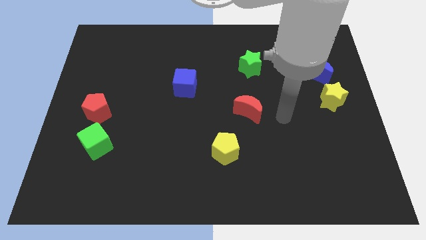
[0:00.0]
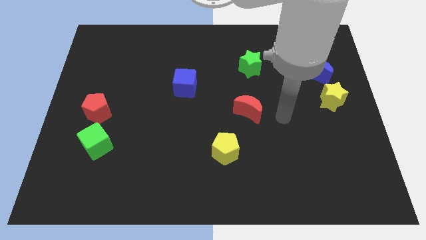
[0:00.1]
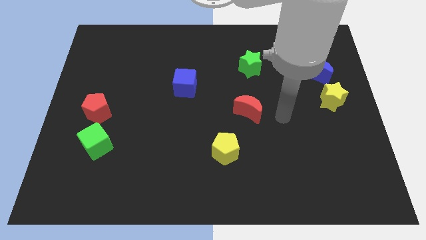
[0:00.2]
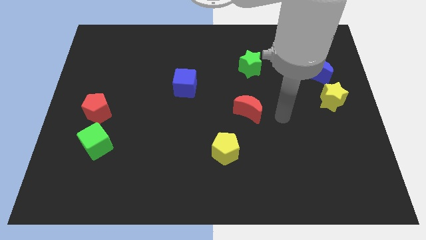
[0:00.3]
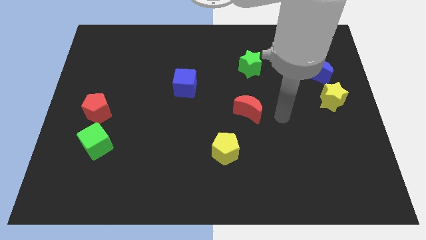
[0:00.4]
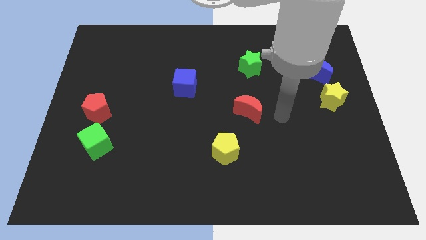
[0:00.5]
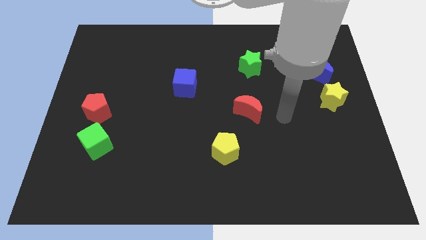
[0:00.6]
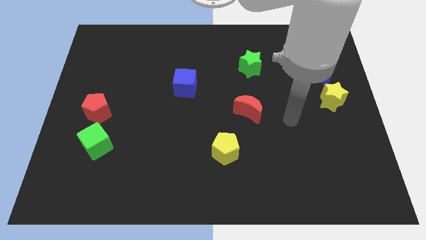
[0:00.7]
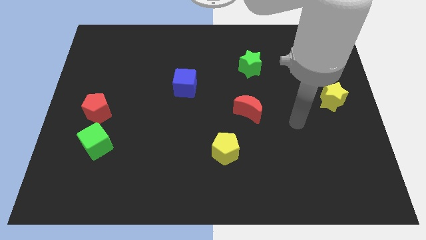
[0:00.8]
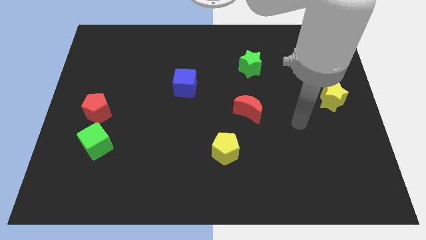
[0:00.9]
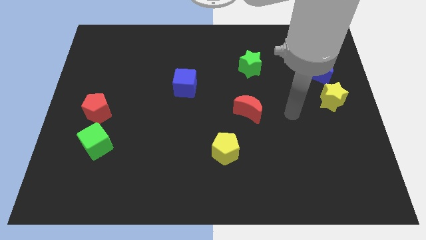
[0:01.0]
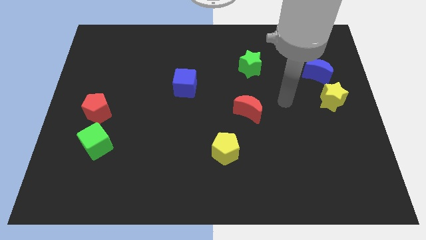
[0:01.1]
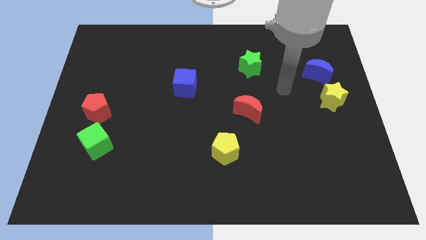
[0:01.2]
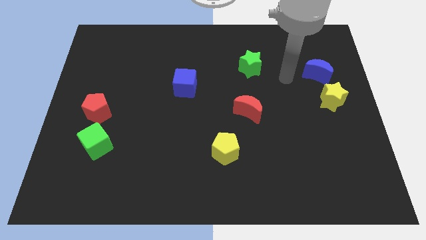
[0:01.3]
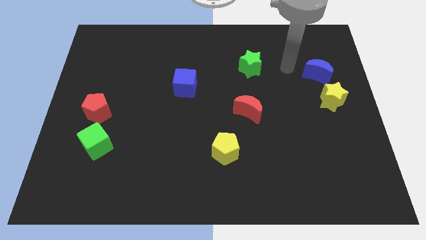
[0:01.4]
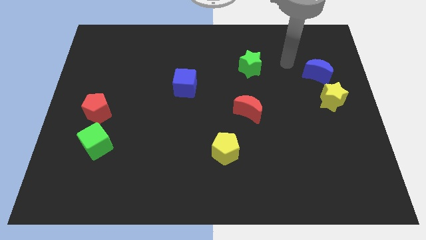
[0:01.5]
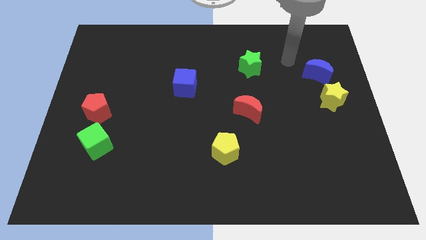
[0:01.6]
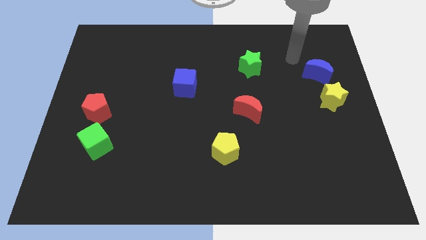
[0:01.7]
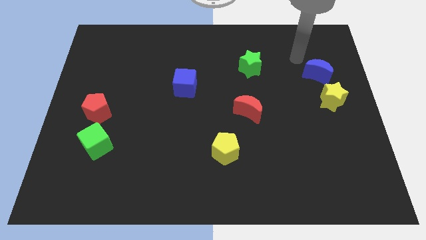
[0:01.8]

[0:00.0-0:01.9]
move your arm on the top right of the green star

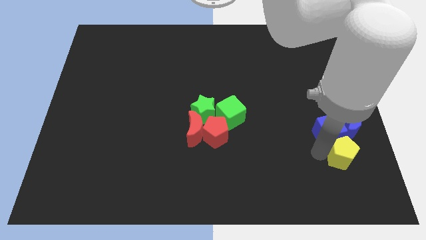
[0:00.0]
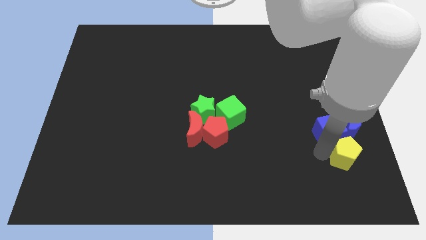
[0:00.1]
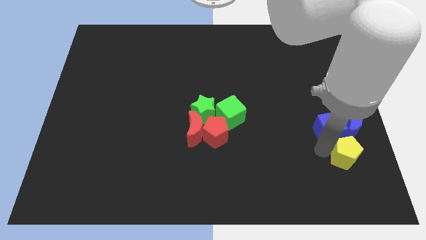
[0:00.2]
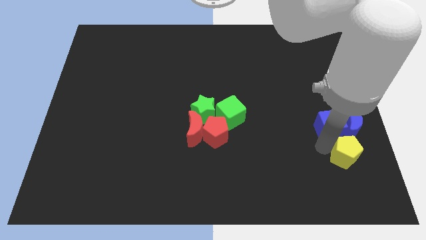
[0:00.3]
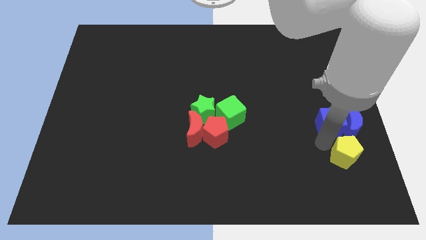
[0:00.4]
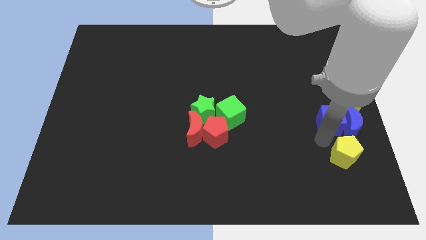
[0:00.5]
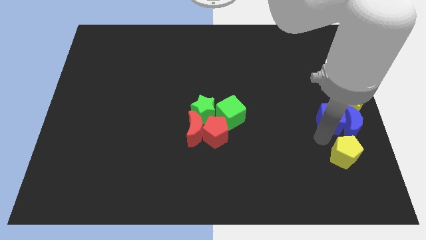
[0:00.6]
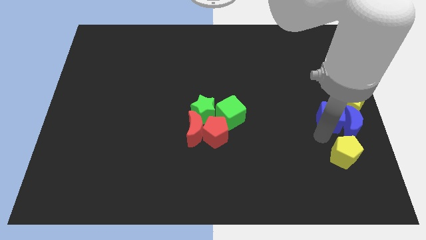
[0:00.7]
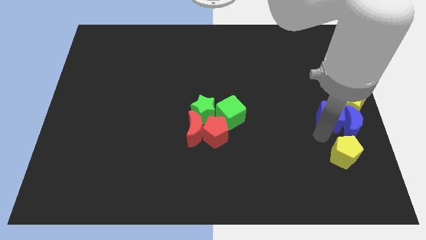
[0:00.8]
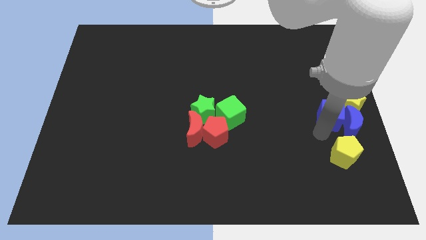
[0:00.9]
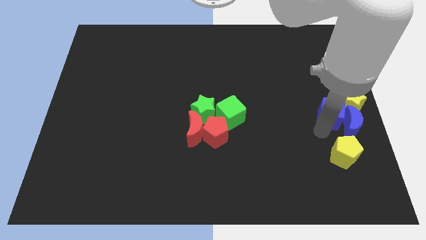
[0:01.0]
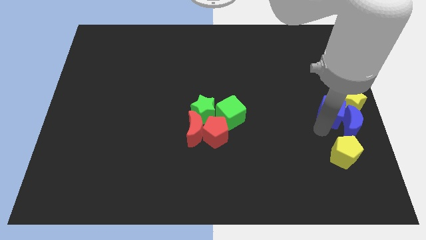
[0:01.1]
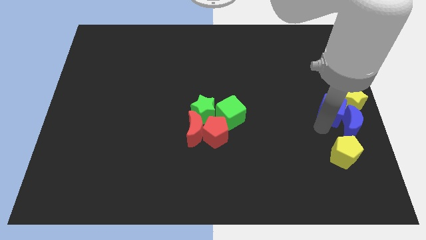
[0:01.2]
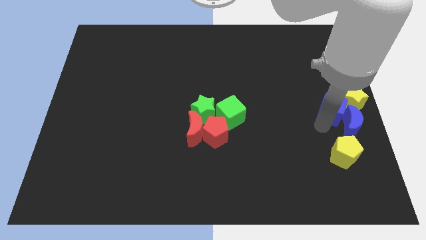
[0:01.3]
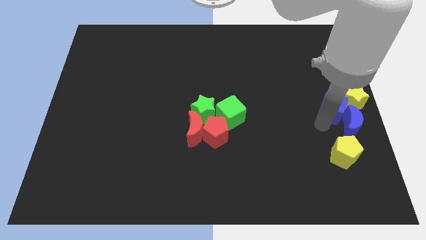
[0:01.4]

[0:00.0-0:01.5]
separate the yellow pentagon and the blue cube

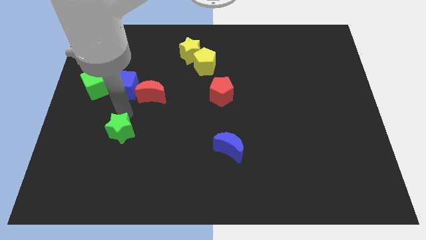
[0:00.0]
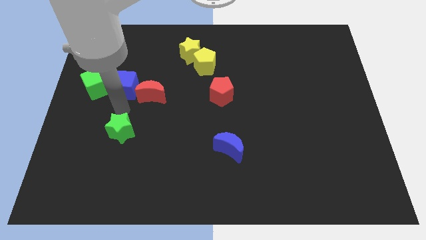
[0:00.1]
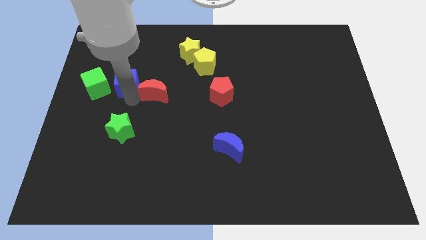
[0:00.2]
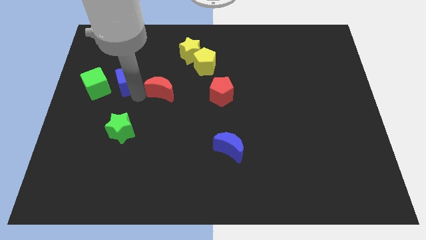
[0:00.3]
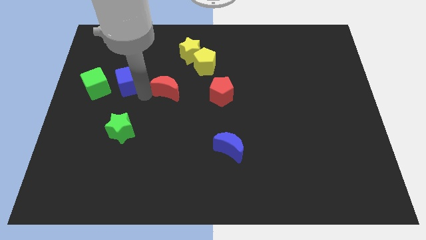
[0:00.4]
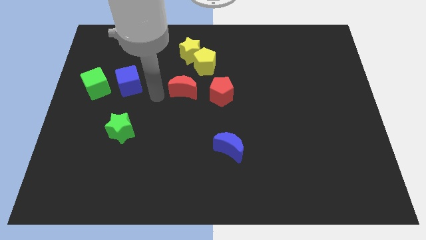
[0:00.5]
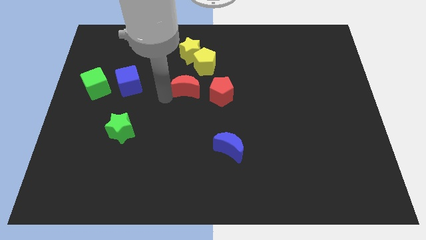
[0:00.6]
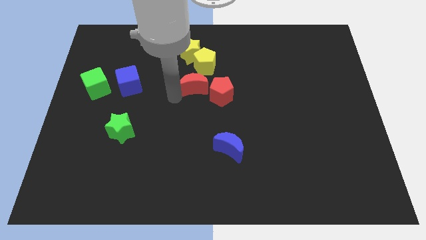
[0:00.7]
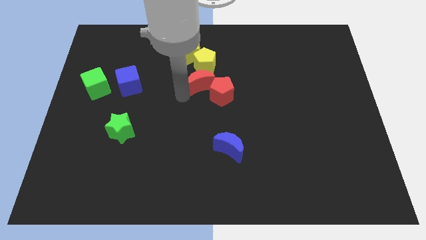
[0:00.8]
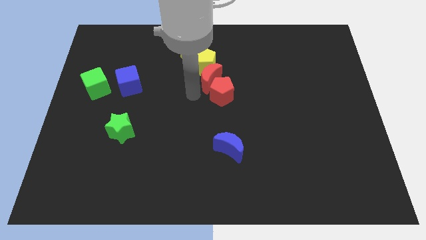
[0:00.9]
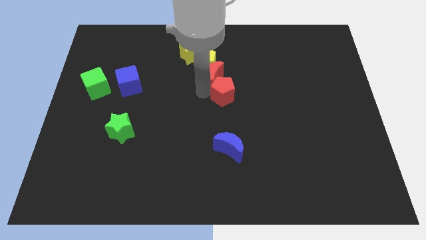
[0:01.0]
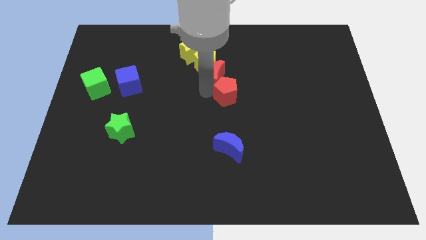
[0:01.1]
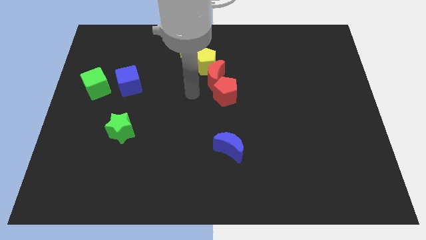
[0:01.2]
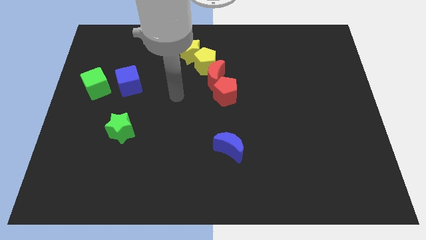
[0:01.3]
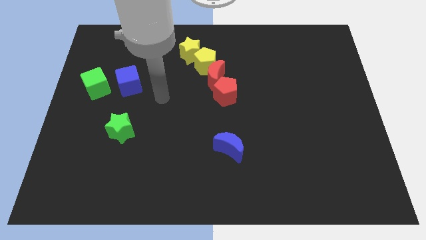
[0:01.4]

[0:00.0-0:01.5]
place the red moon in between yellow pentagon and red pentagon

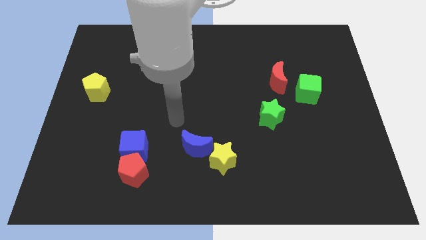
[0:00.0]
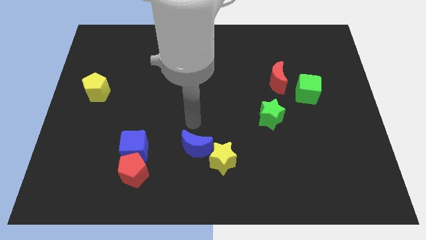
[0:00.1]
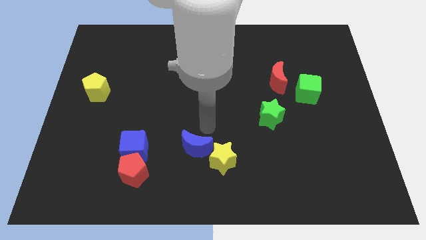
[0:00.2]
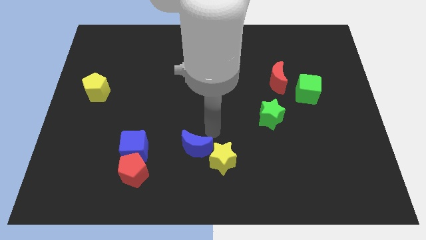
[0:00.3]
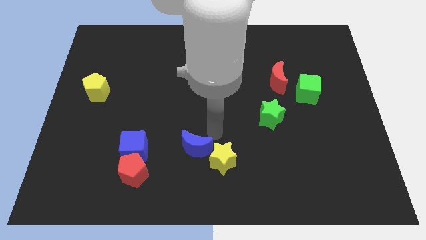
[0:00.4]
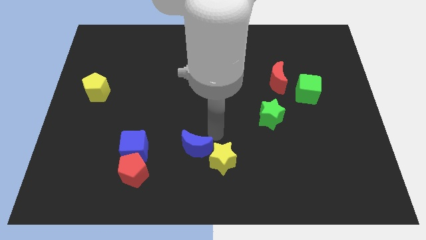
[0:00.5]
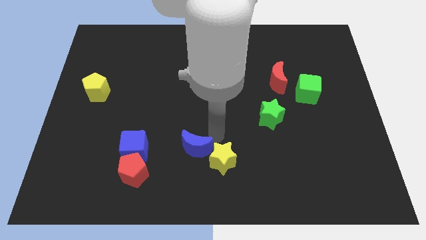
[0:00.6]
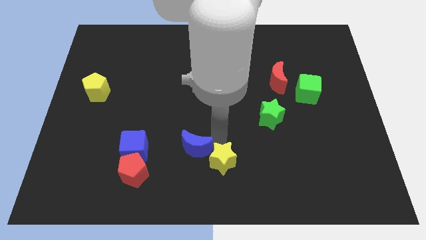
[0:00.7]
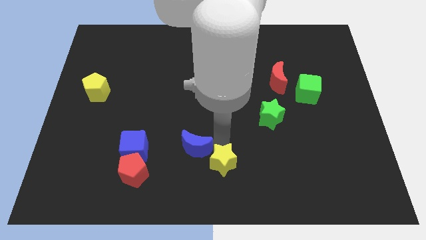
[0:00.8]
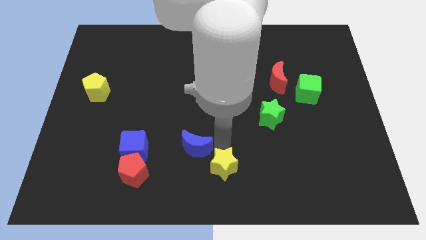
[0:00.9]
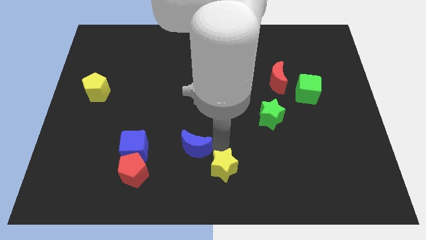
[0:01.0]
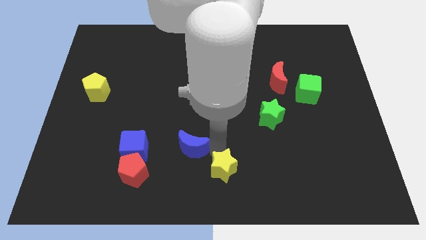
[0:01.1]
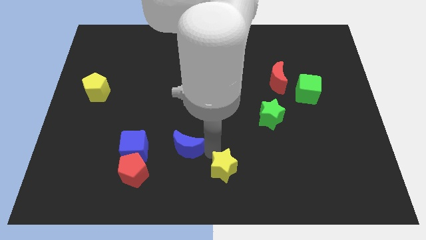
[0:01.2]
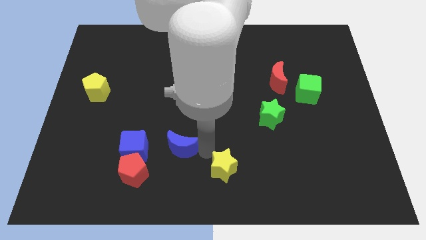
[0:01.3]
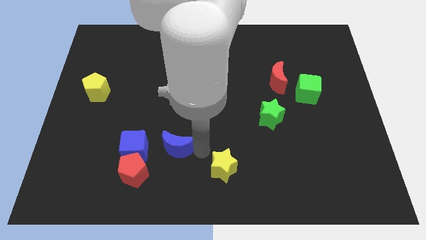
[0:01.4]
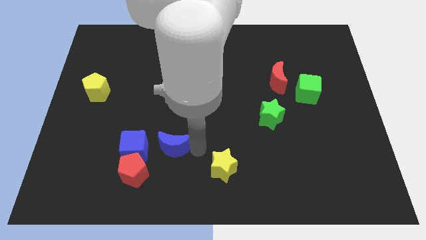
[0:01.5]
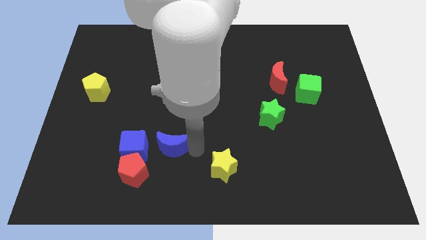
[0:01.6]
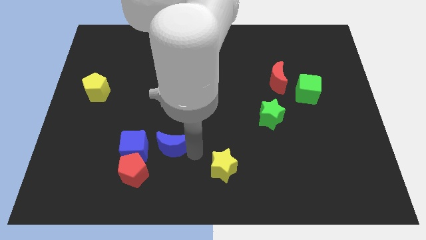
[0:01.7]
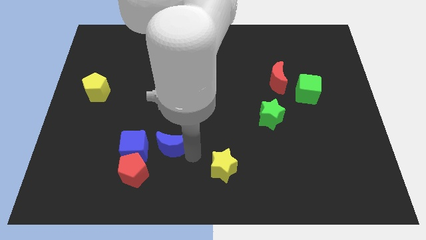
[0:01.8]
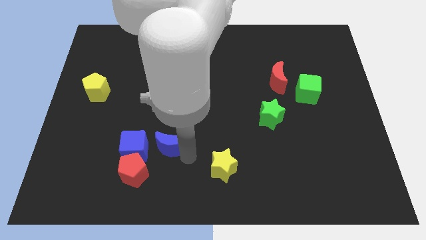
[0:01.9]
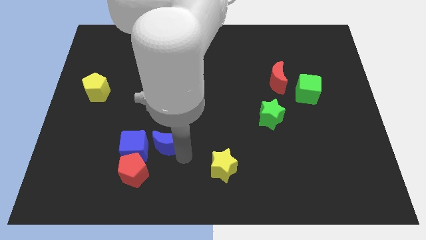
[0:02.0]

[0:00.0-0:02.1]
separate the blue crescent and yellow star

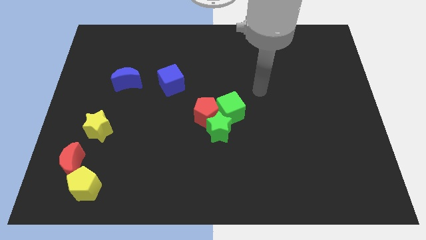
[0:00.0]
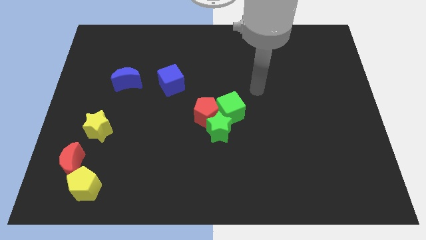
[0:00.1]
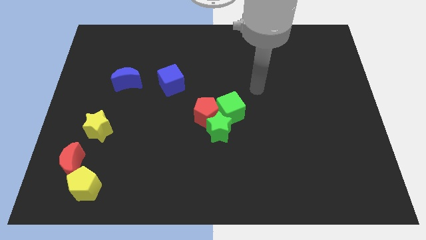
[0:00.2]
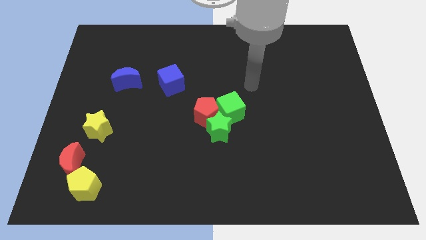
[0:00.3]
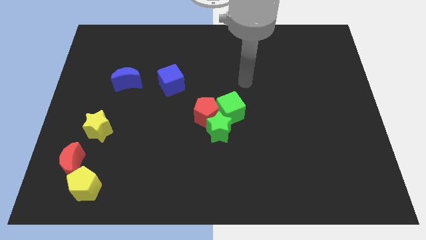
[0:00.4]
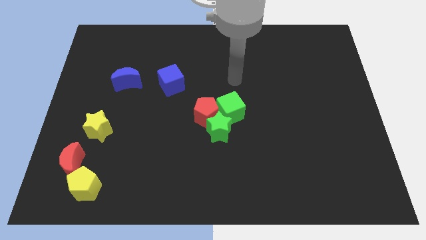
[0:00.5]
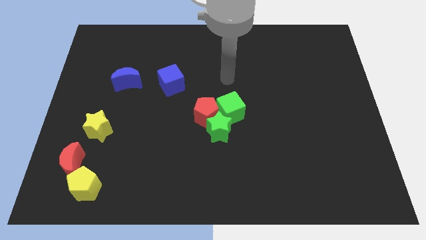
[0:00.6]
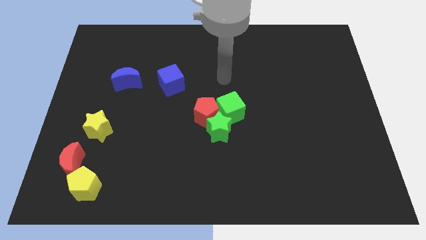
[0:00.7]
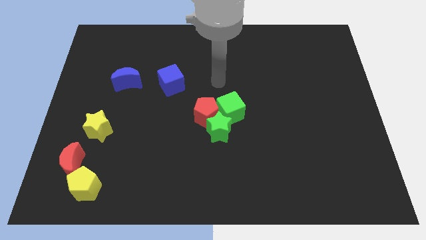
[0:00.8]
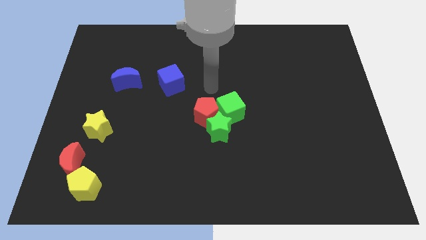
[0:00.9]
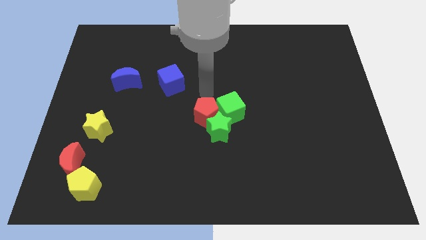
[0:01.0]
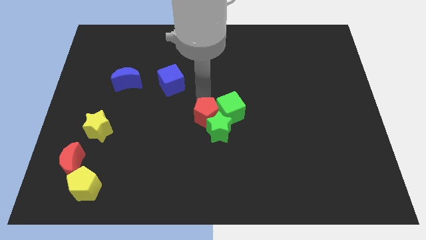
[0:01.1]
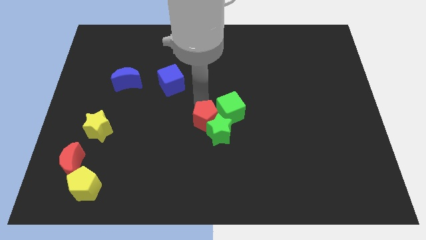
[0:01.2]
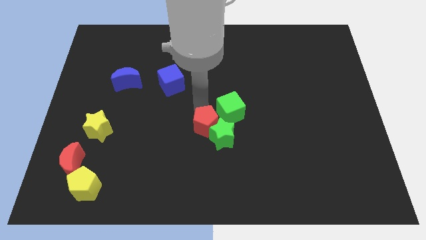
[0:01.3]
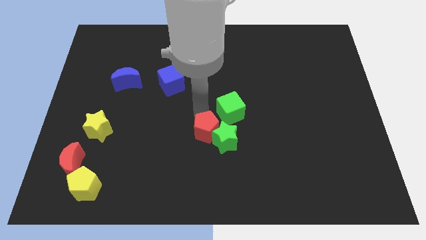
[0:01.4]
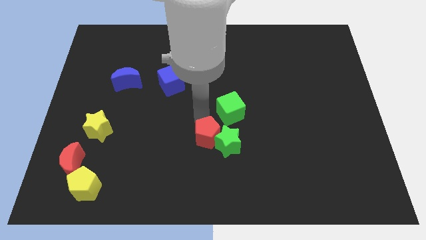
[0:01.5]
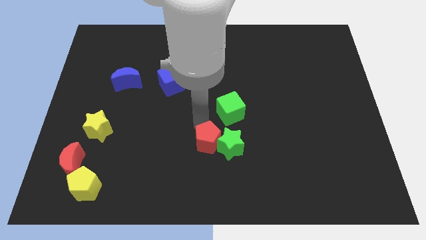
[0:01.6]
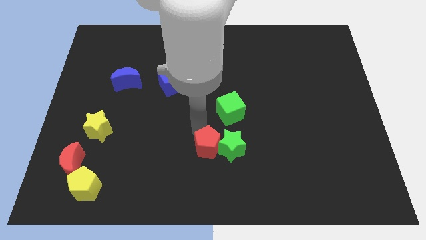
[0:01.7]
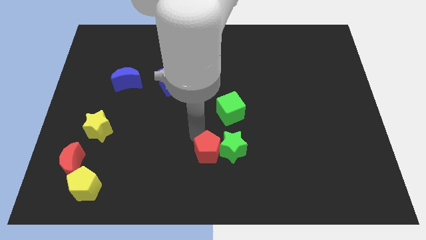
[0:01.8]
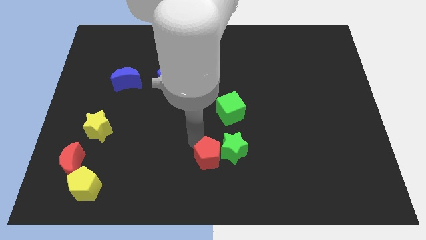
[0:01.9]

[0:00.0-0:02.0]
push the red pentagon along with the green star to the bottom
